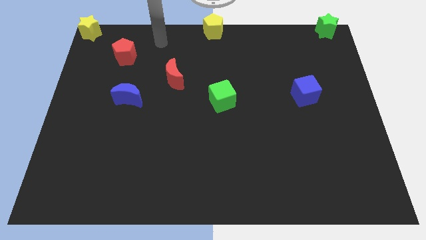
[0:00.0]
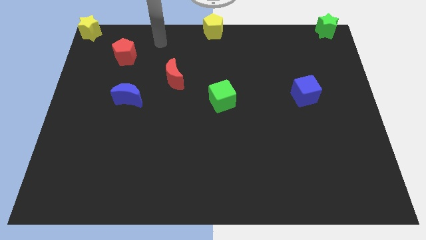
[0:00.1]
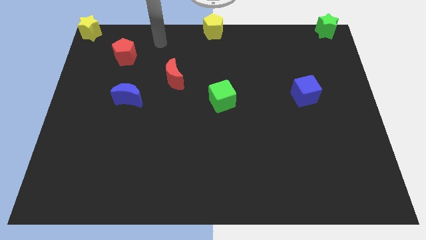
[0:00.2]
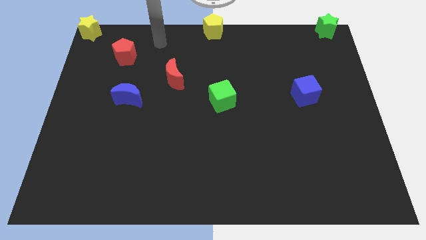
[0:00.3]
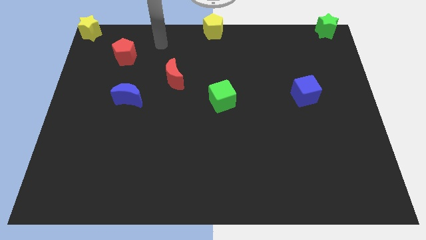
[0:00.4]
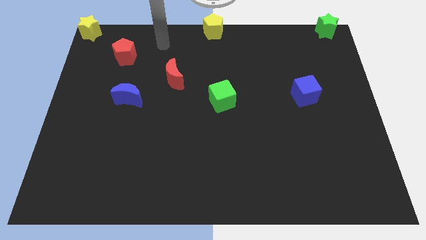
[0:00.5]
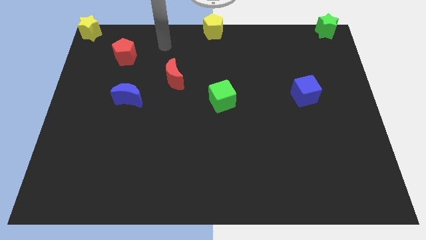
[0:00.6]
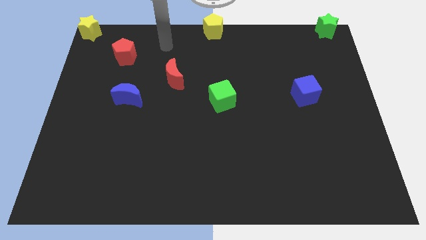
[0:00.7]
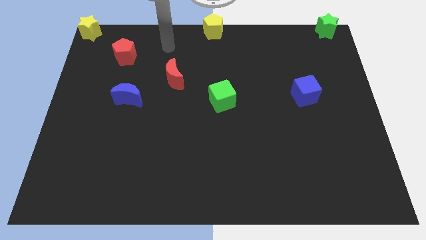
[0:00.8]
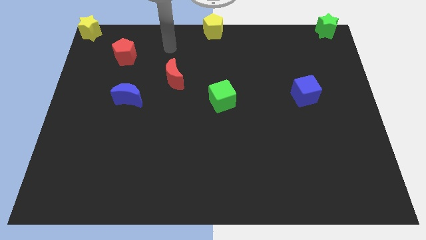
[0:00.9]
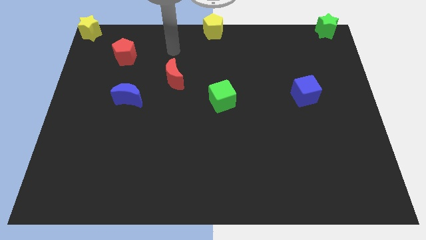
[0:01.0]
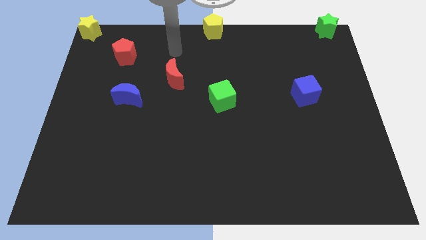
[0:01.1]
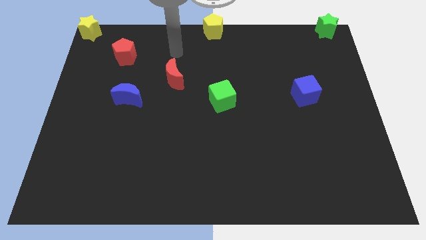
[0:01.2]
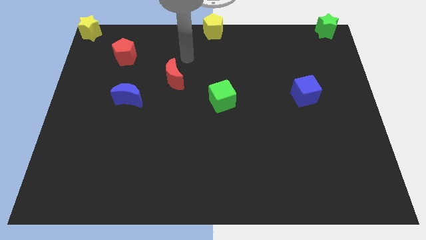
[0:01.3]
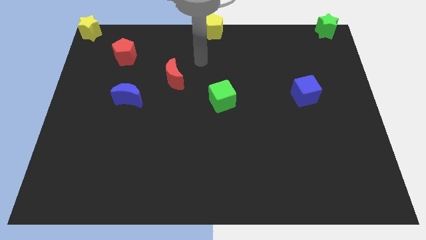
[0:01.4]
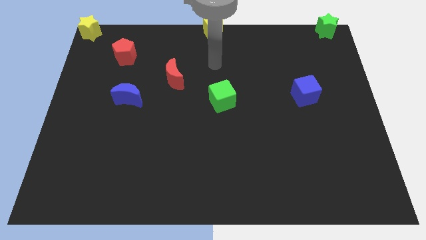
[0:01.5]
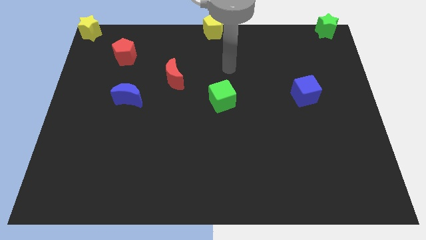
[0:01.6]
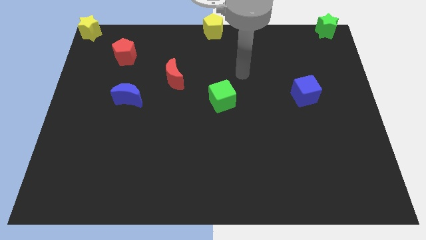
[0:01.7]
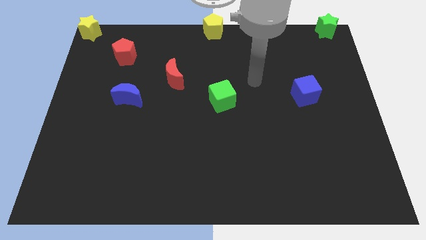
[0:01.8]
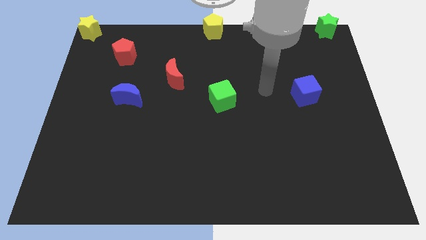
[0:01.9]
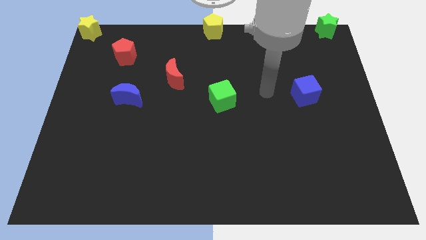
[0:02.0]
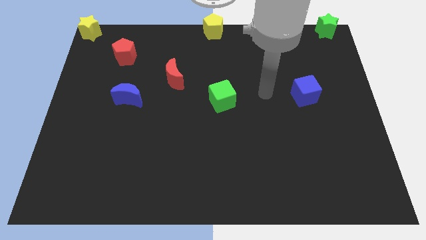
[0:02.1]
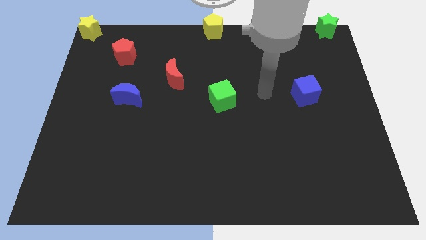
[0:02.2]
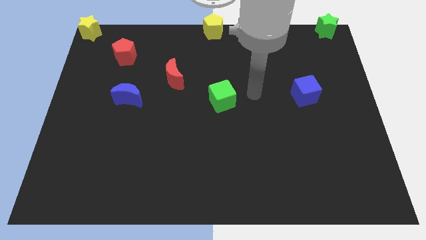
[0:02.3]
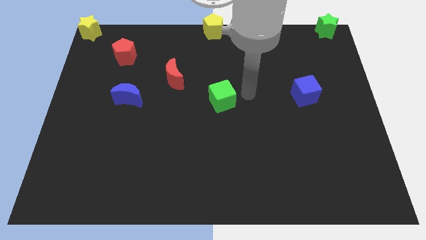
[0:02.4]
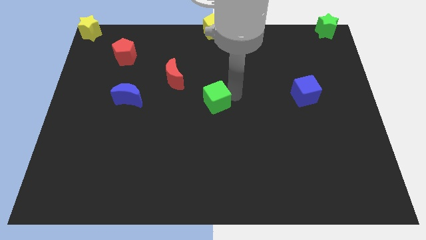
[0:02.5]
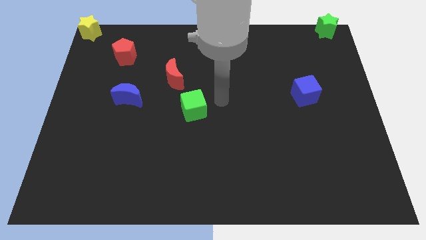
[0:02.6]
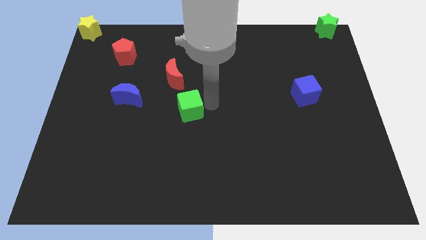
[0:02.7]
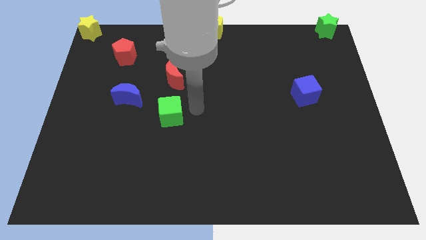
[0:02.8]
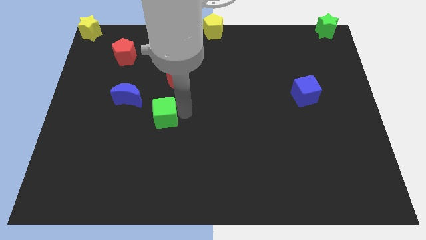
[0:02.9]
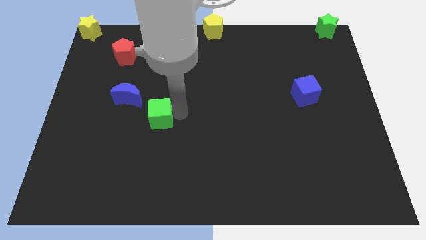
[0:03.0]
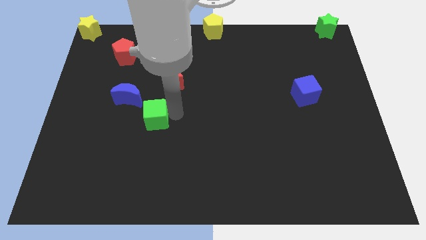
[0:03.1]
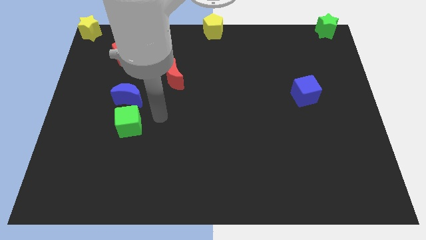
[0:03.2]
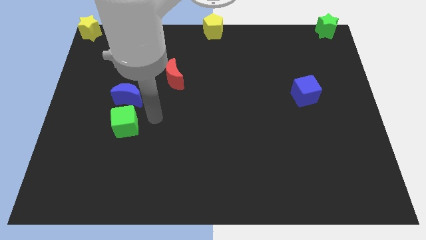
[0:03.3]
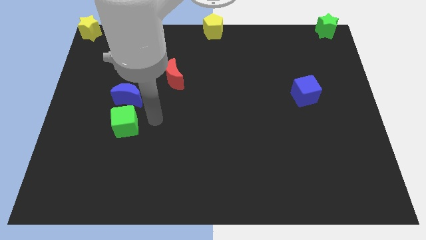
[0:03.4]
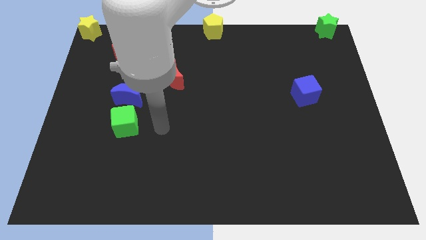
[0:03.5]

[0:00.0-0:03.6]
push green cube below blue crescent

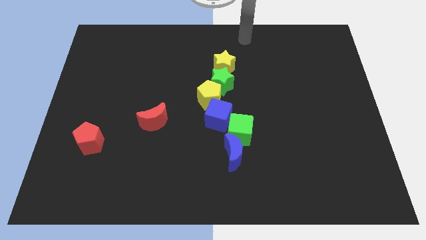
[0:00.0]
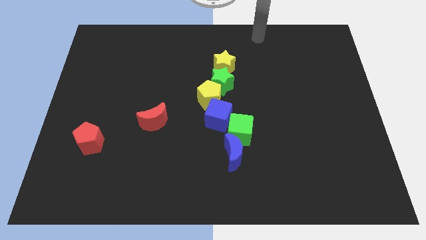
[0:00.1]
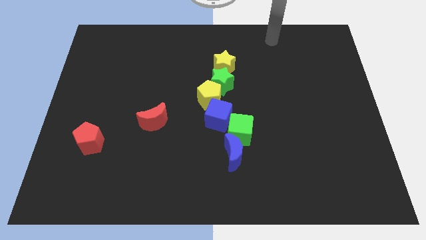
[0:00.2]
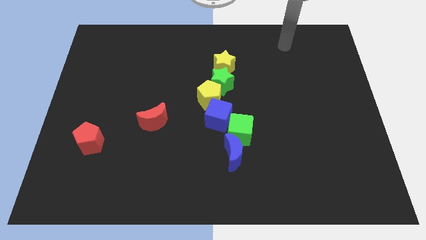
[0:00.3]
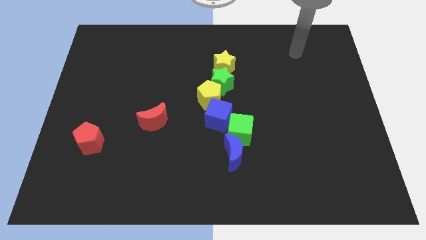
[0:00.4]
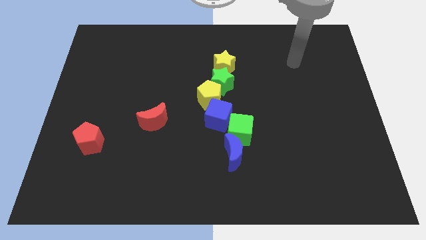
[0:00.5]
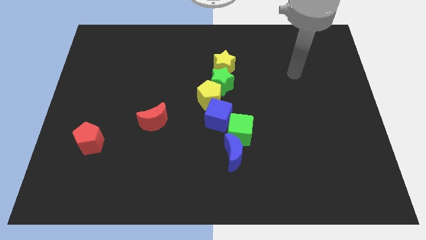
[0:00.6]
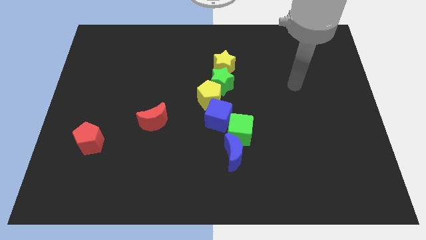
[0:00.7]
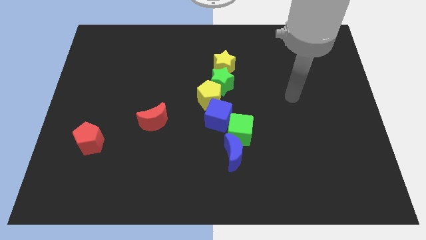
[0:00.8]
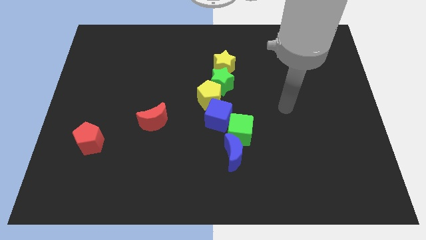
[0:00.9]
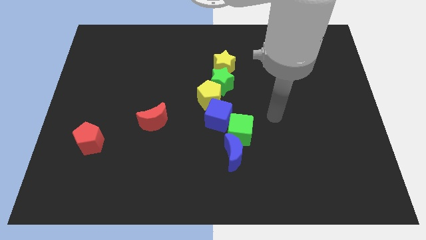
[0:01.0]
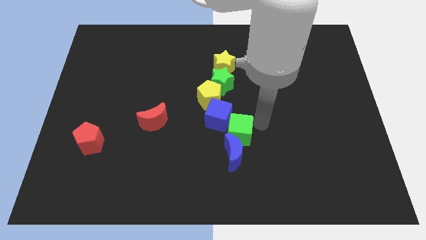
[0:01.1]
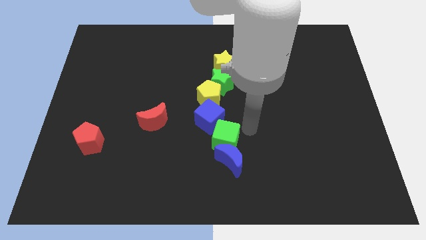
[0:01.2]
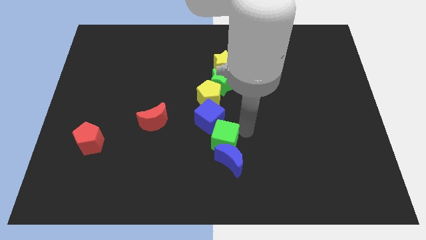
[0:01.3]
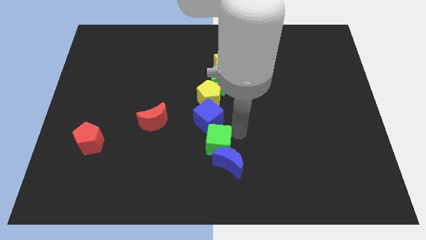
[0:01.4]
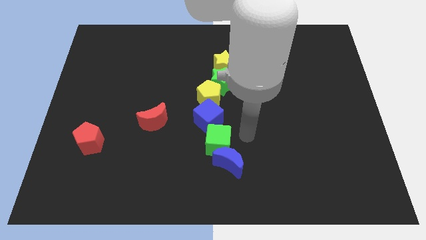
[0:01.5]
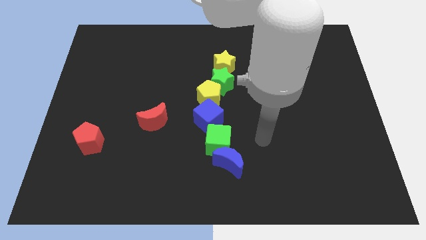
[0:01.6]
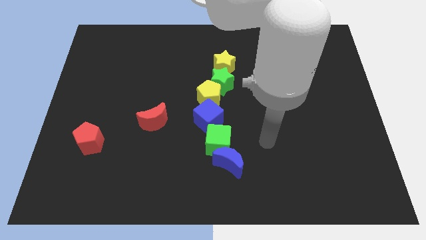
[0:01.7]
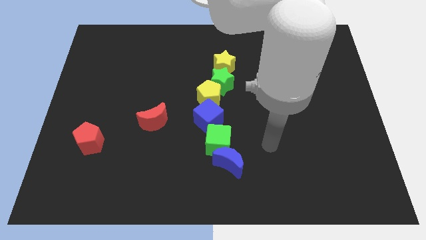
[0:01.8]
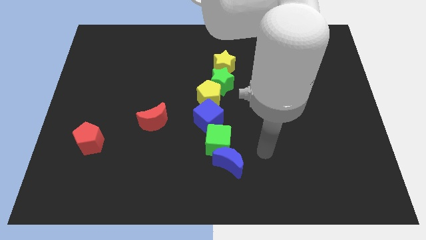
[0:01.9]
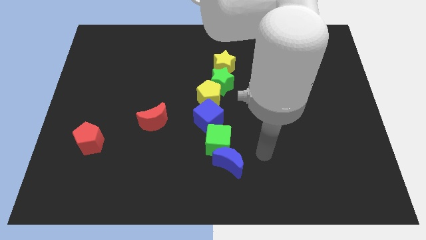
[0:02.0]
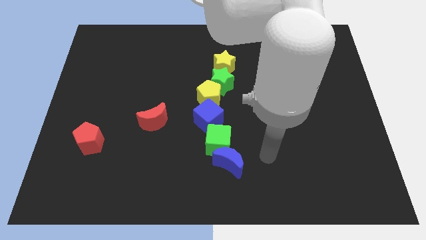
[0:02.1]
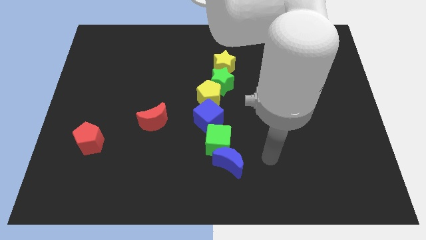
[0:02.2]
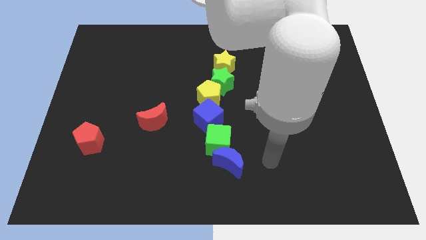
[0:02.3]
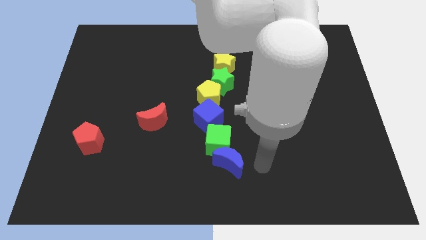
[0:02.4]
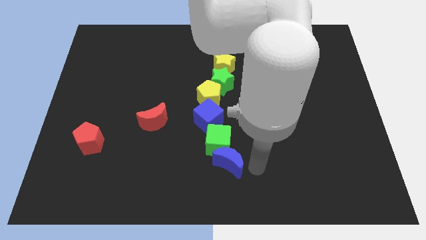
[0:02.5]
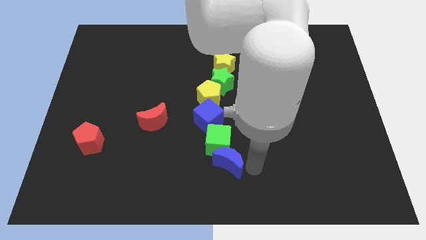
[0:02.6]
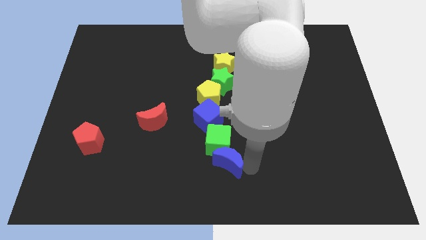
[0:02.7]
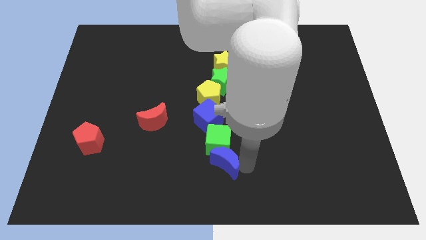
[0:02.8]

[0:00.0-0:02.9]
place the green cube in between the blue blocks

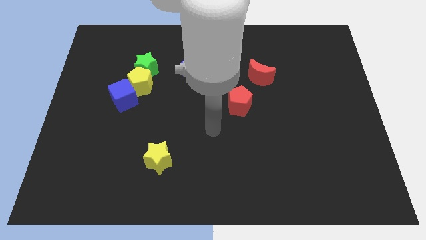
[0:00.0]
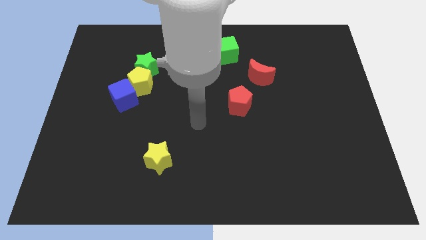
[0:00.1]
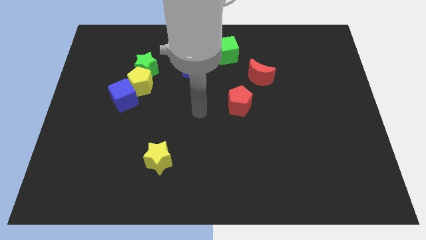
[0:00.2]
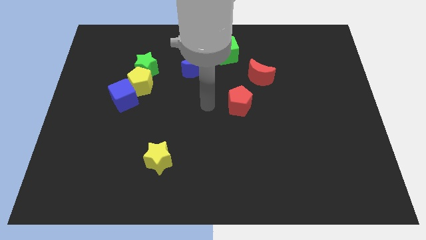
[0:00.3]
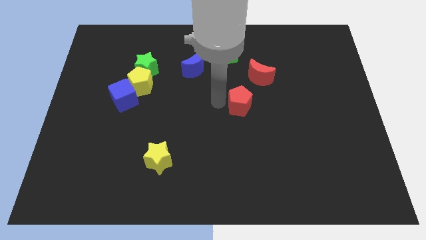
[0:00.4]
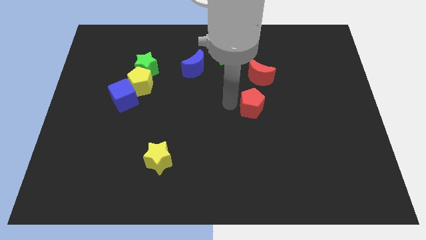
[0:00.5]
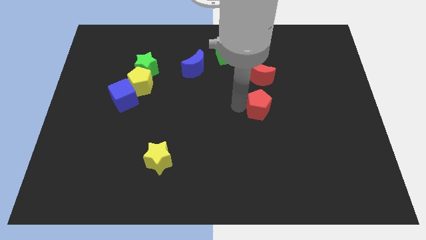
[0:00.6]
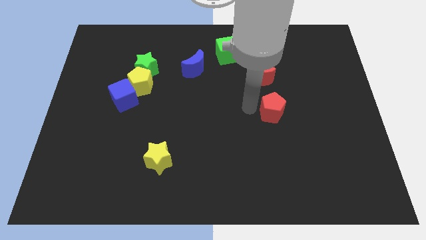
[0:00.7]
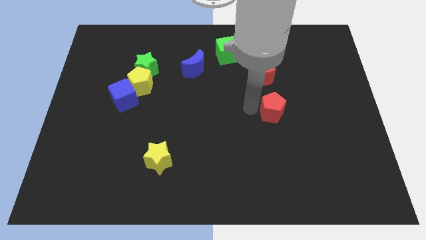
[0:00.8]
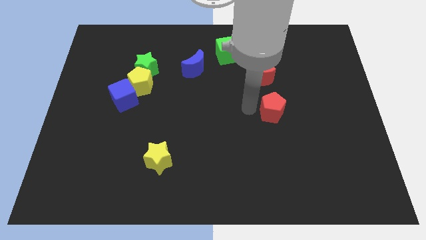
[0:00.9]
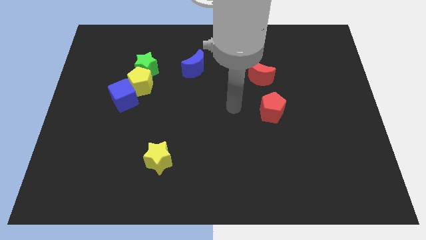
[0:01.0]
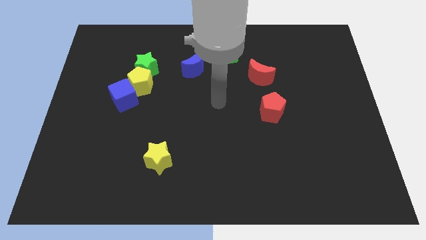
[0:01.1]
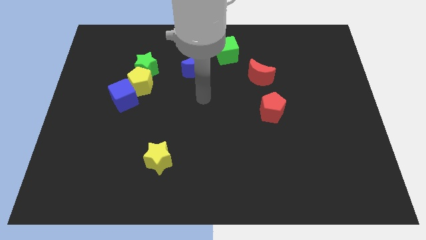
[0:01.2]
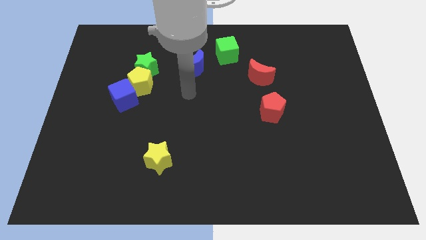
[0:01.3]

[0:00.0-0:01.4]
place the red pentagon below the red moon

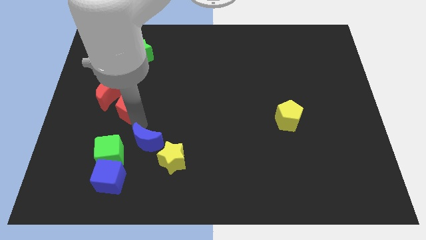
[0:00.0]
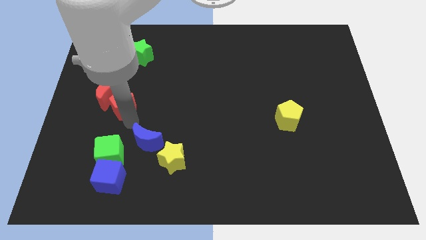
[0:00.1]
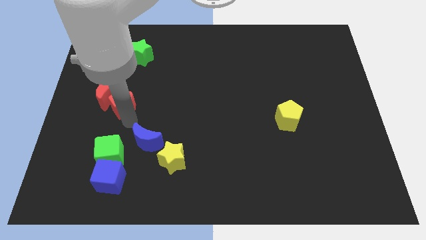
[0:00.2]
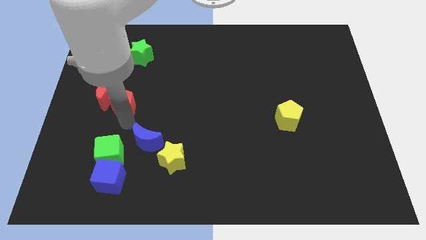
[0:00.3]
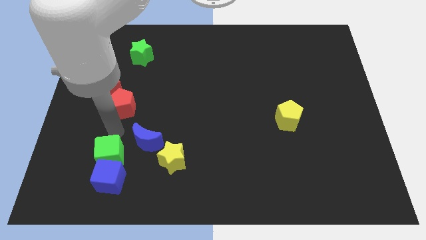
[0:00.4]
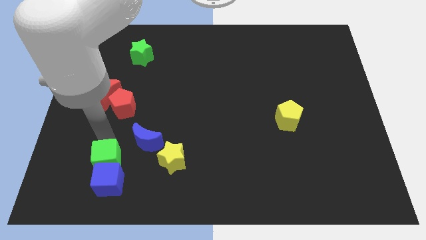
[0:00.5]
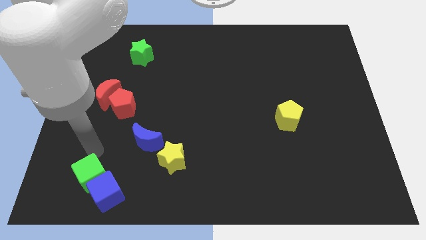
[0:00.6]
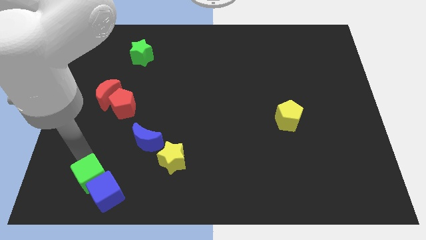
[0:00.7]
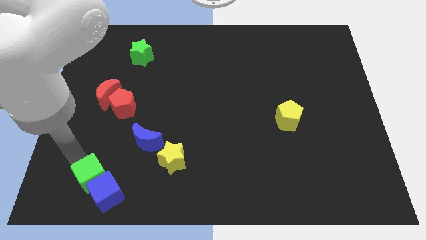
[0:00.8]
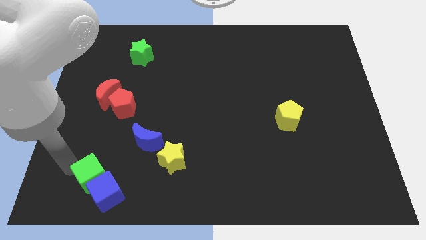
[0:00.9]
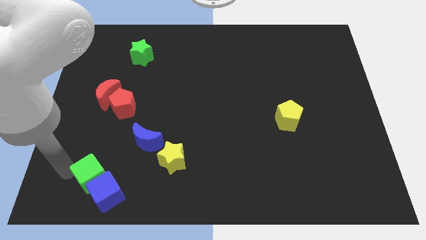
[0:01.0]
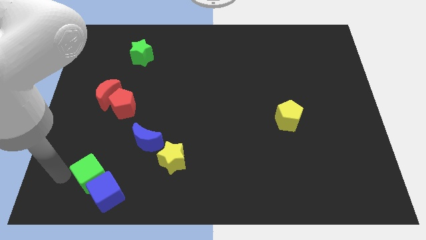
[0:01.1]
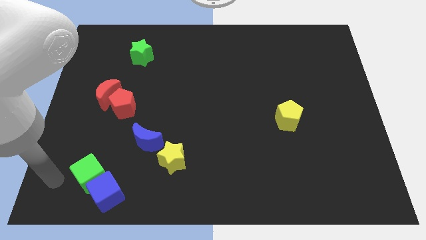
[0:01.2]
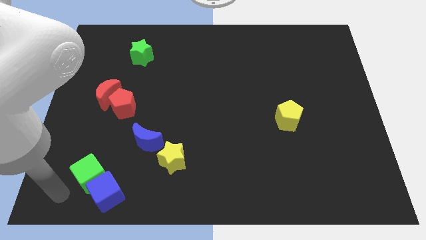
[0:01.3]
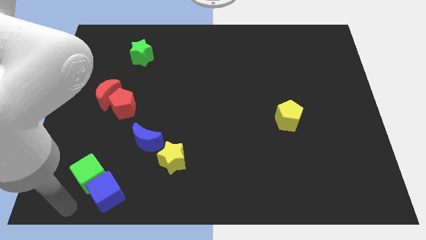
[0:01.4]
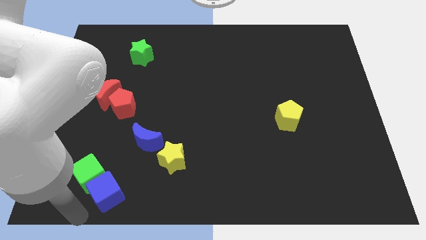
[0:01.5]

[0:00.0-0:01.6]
move the blue cube with the green cube
